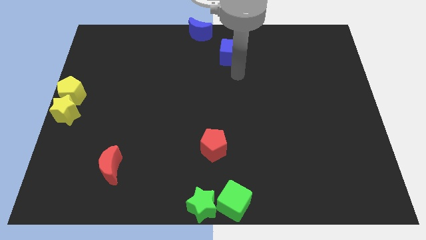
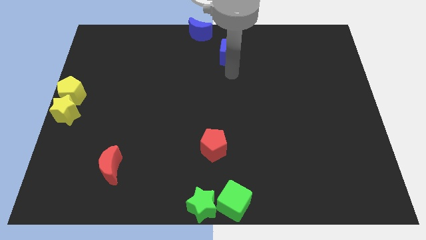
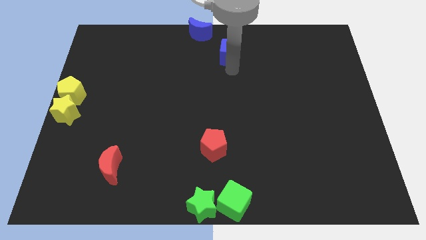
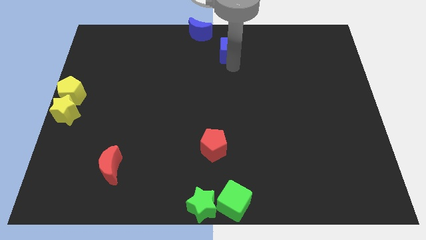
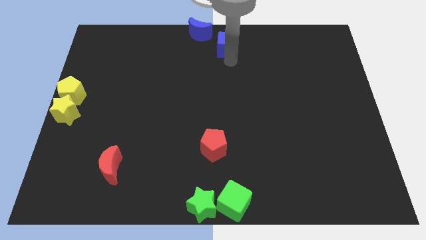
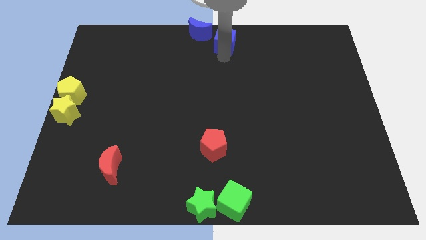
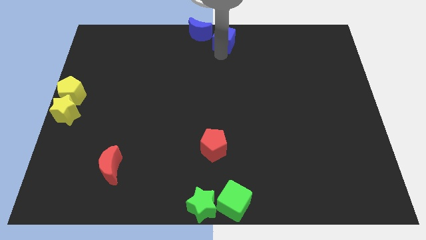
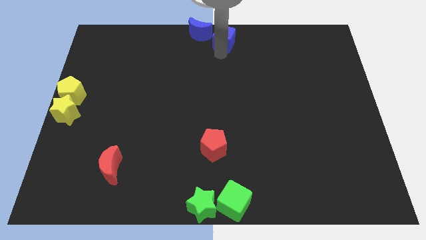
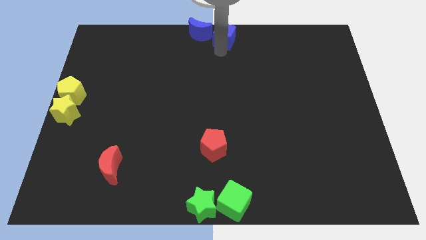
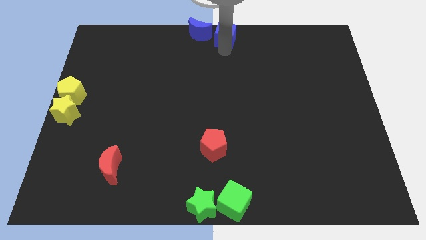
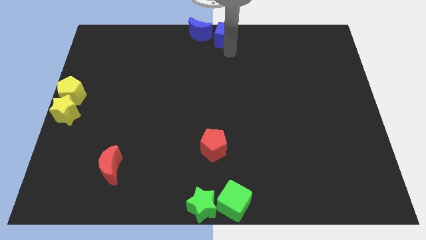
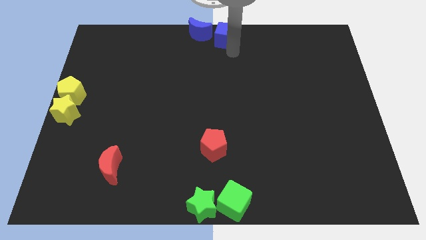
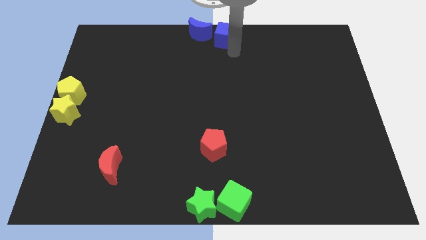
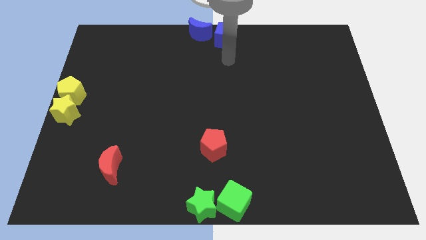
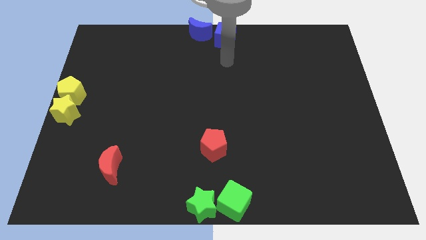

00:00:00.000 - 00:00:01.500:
place the blue cube right of the blue moon

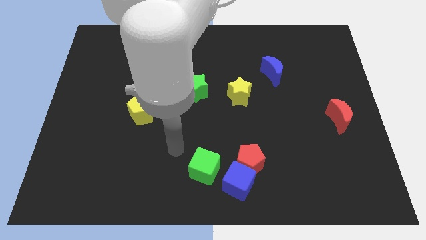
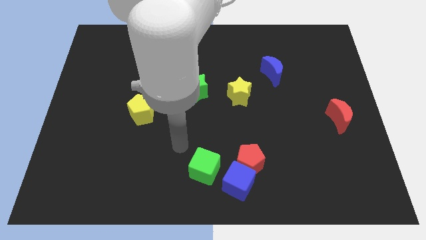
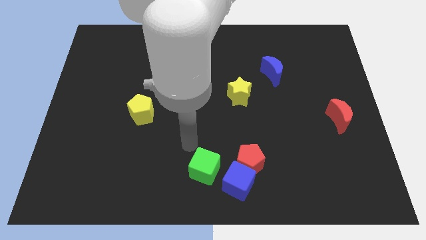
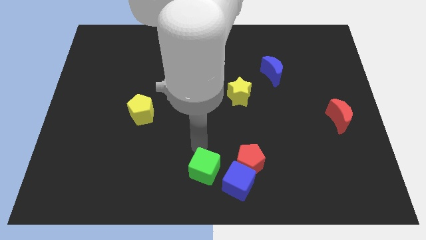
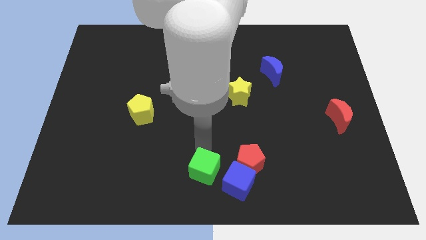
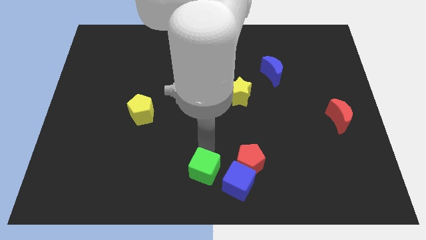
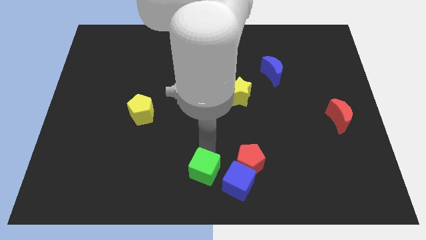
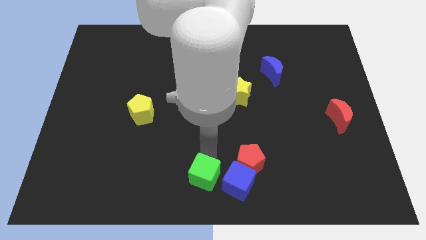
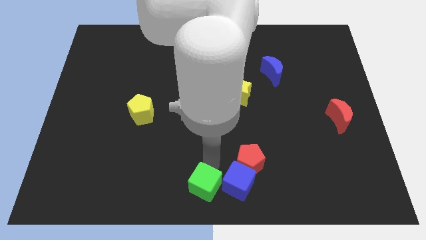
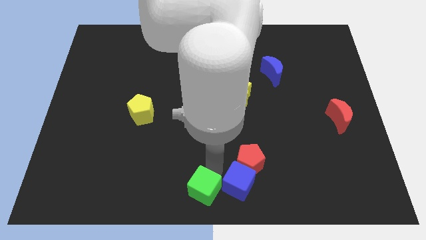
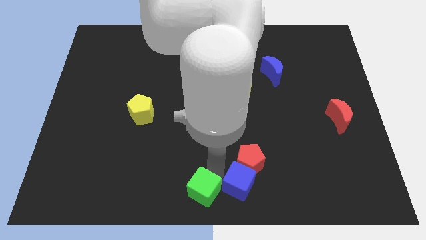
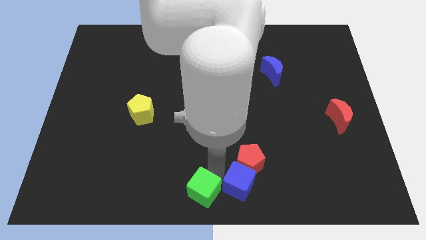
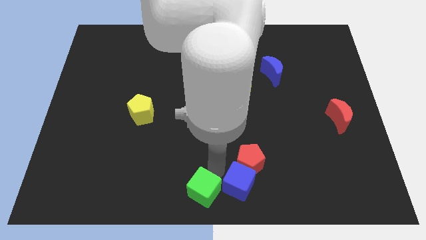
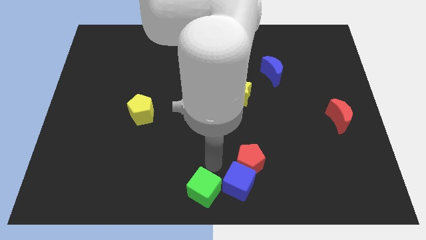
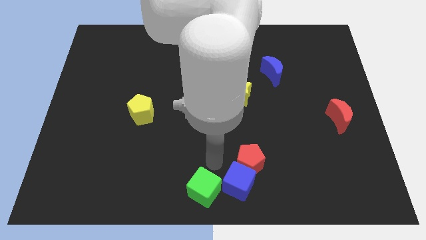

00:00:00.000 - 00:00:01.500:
push the green cube at the left side of the blue cube

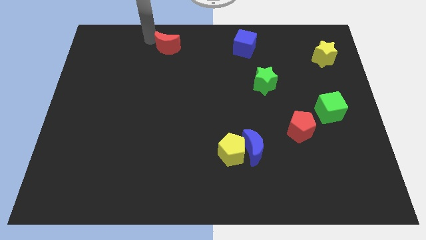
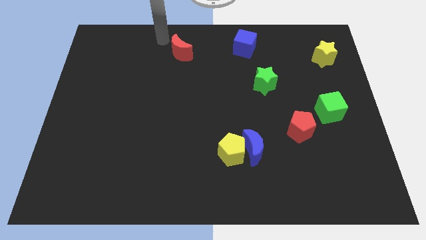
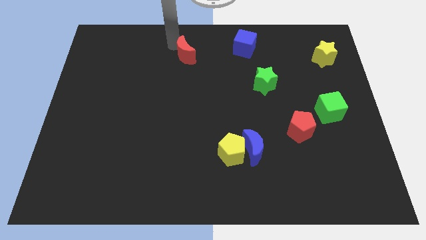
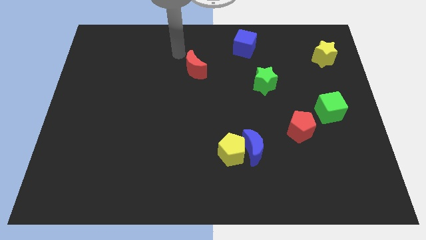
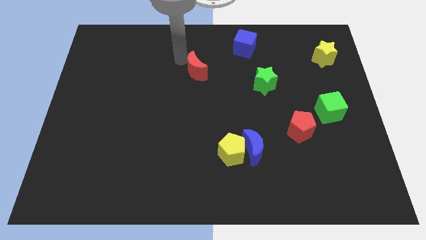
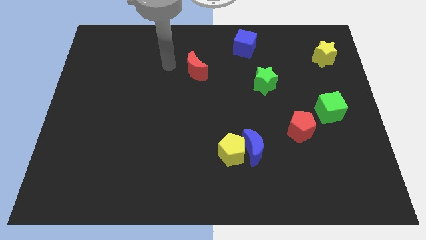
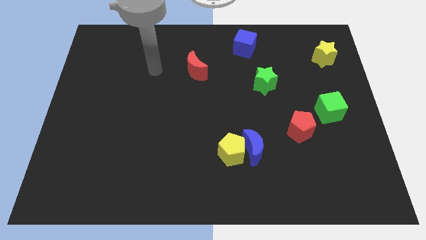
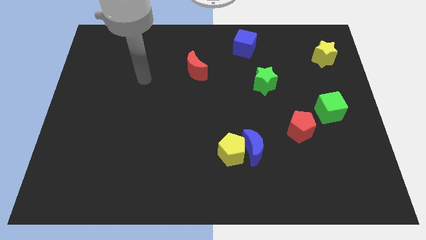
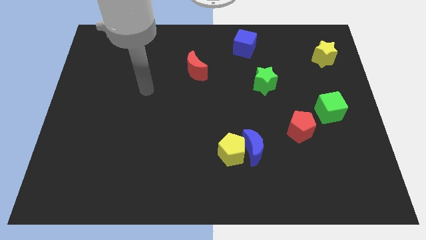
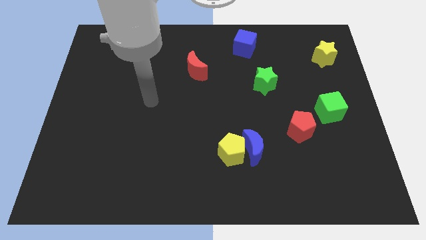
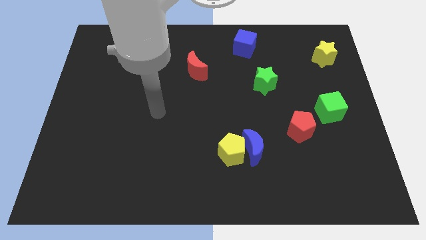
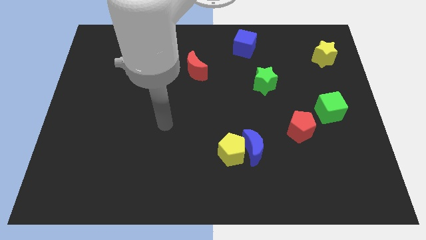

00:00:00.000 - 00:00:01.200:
move the red crescent towards the centre of the board

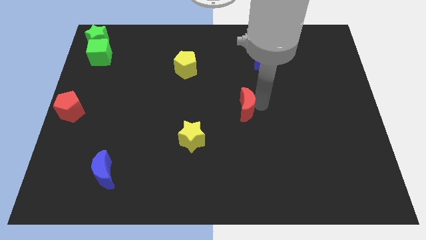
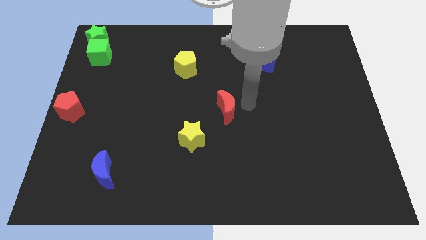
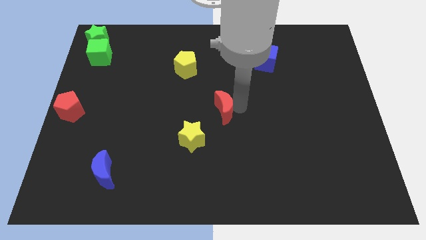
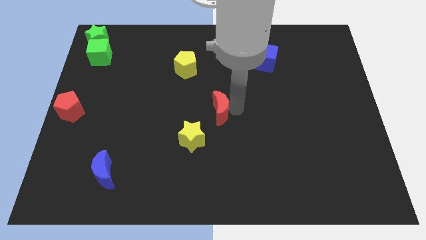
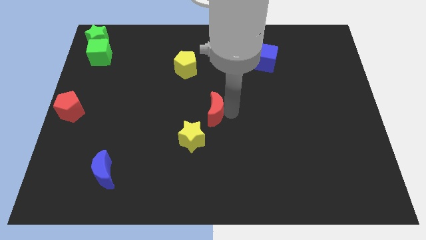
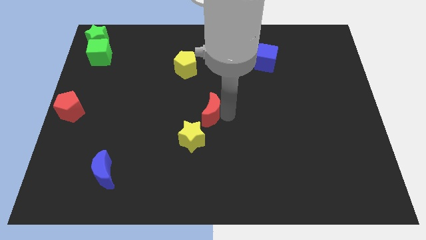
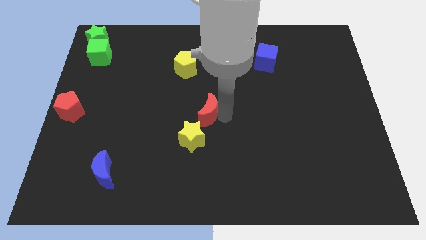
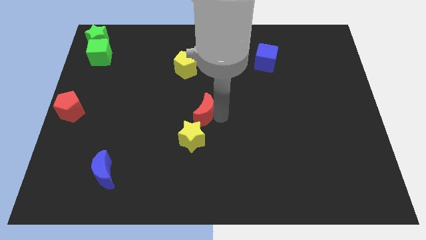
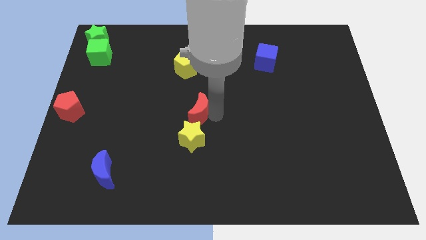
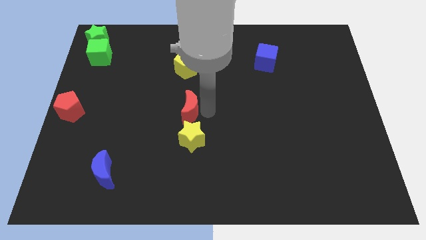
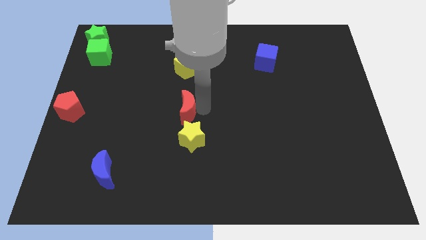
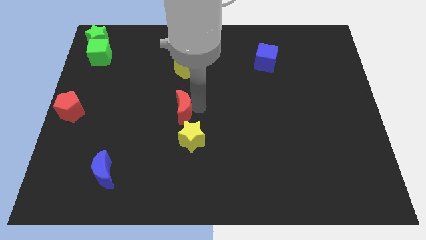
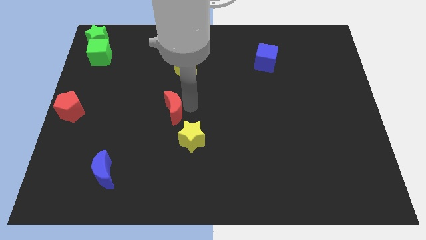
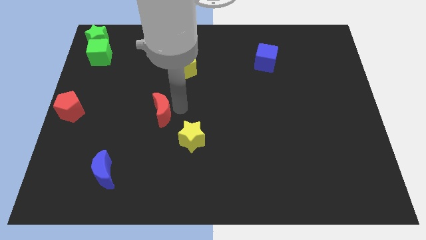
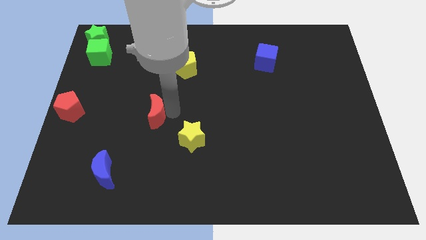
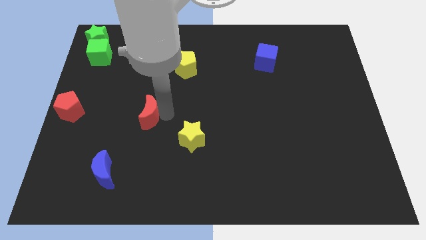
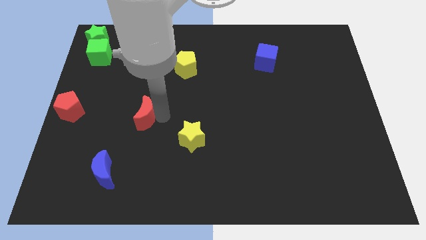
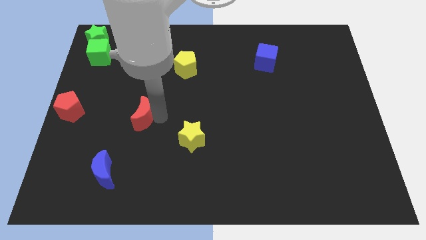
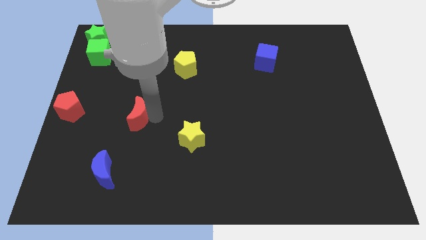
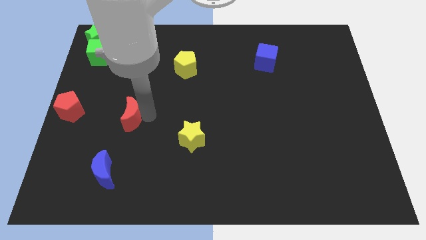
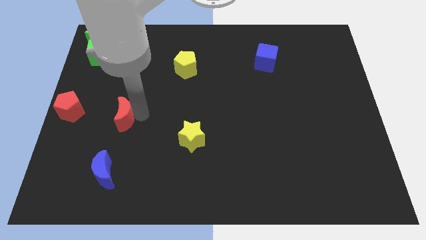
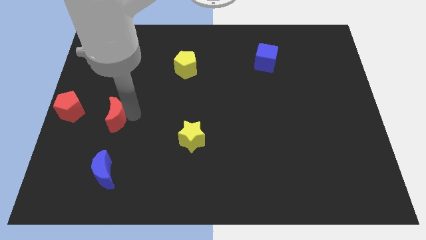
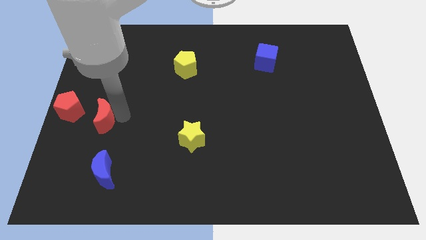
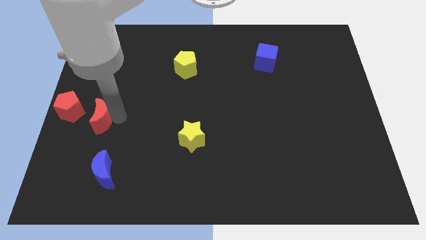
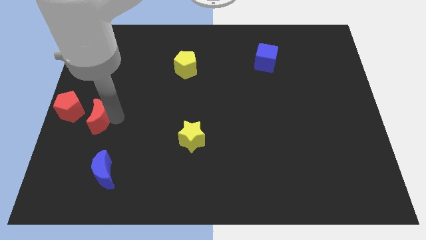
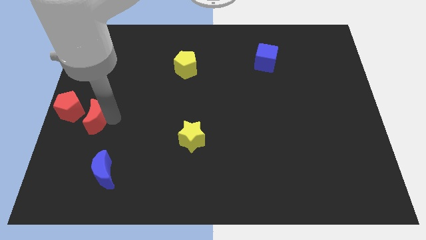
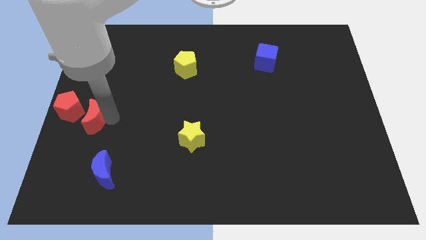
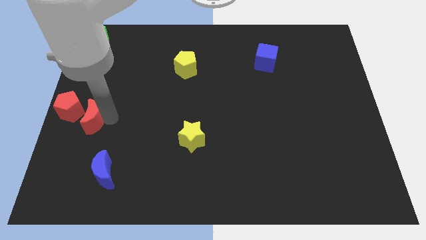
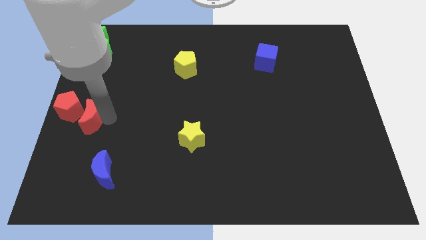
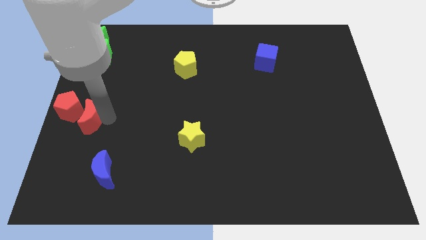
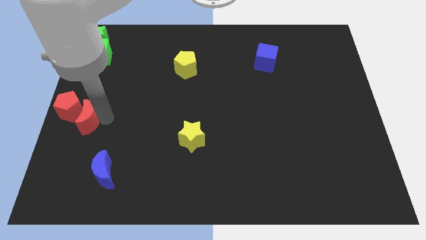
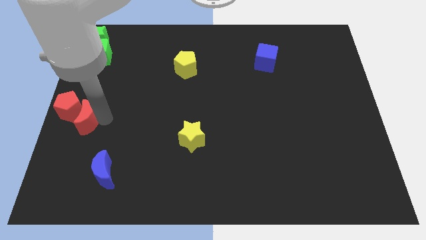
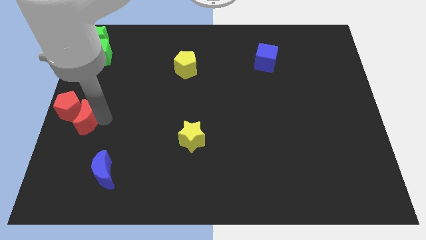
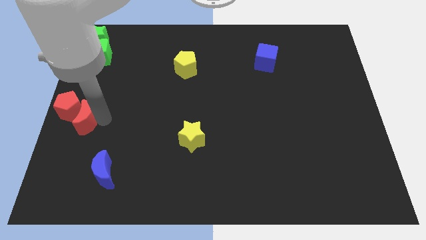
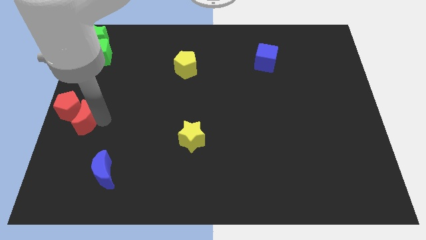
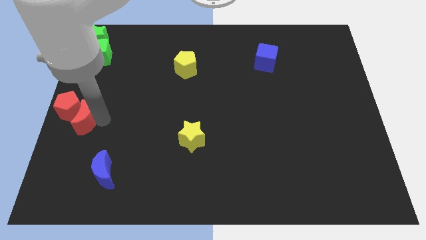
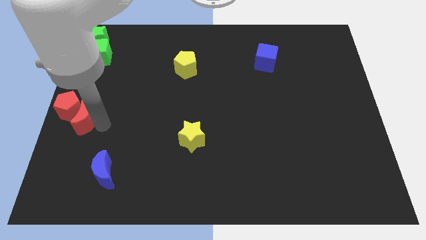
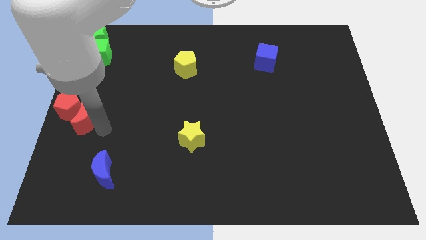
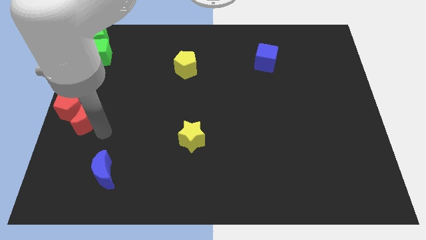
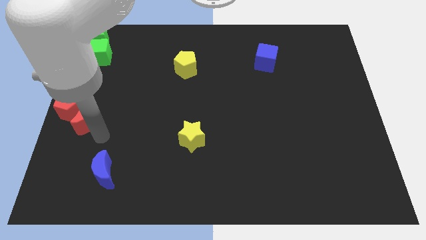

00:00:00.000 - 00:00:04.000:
move the red crescent to the right of the red pentagon

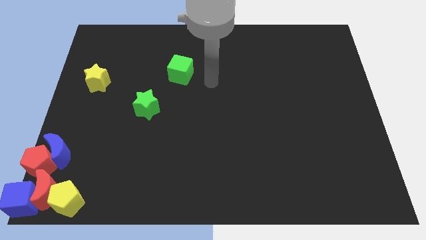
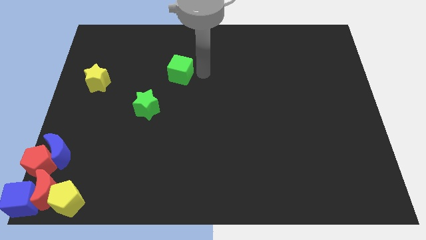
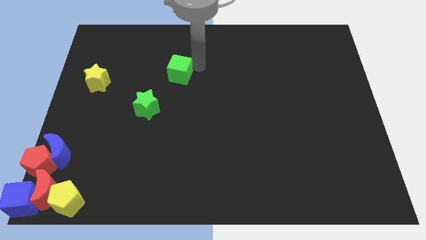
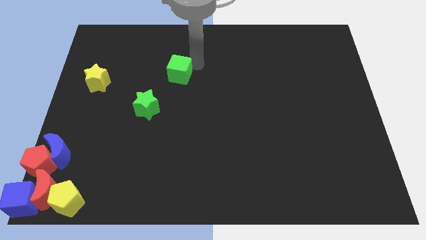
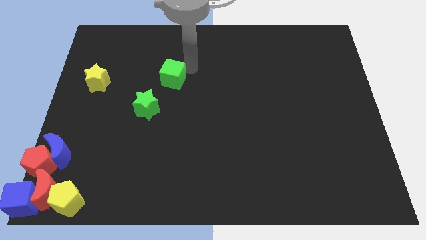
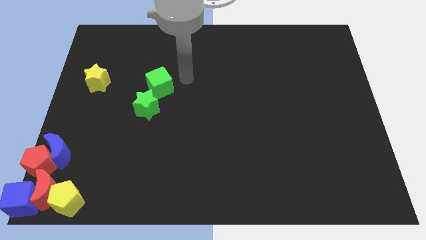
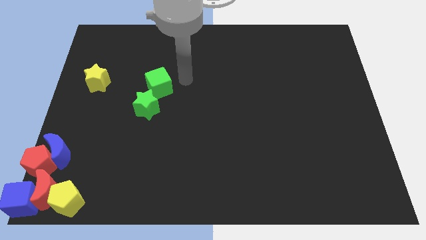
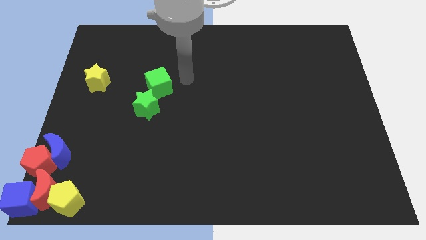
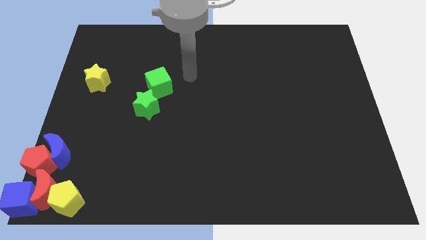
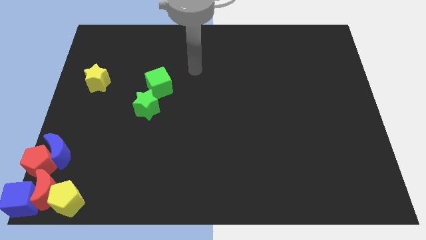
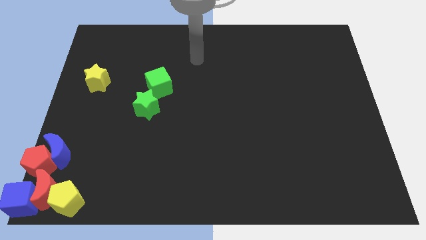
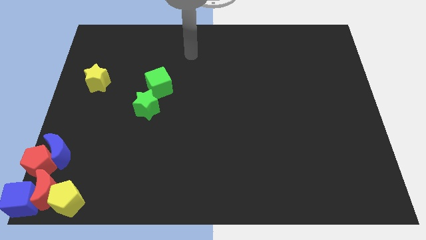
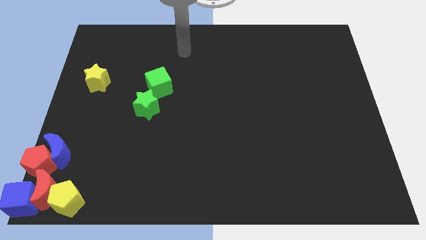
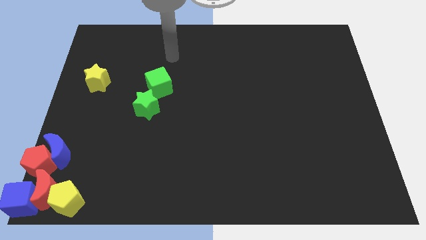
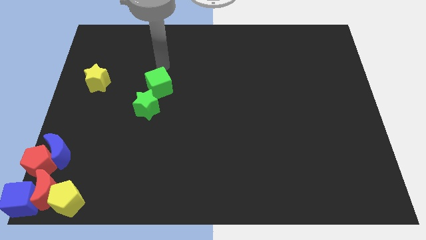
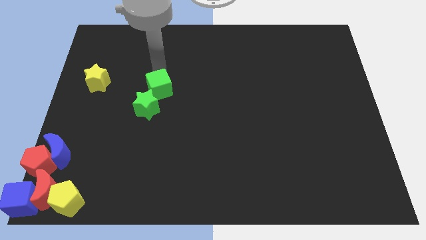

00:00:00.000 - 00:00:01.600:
push the green cube to the top of the green star
